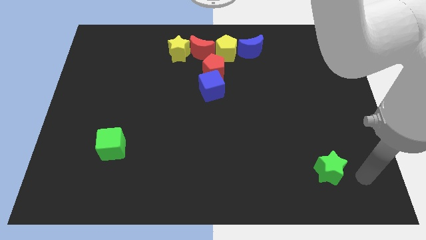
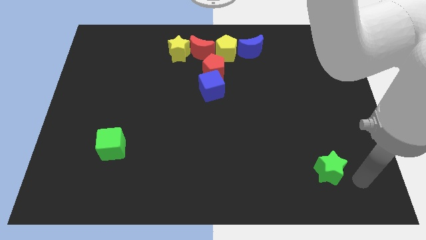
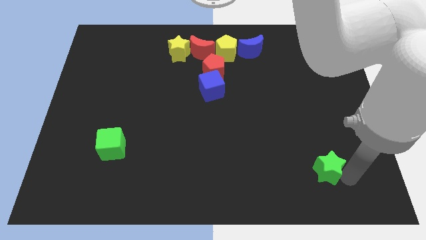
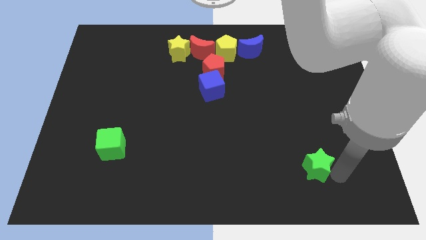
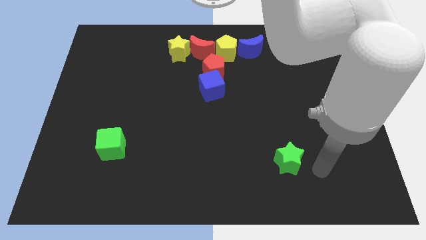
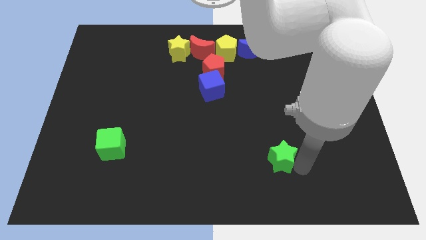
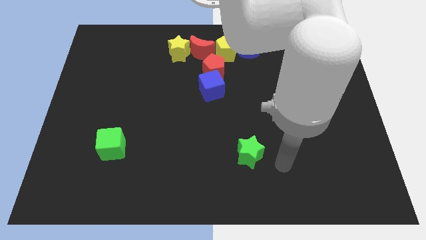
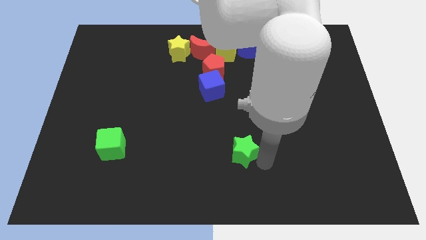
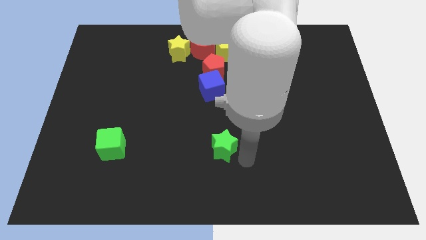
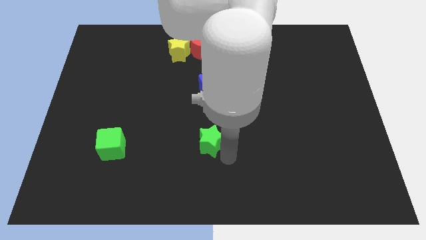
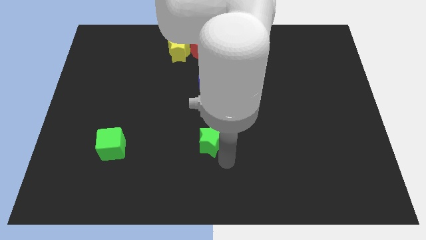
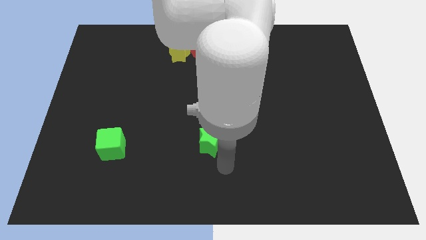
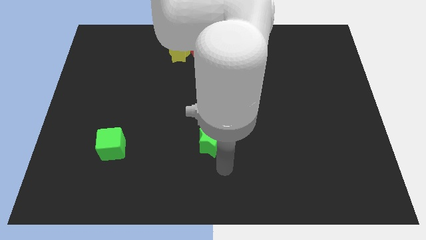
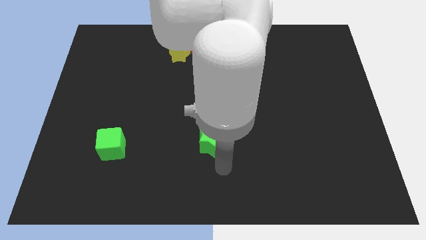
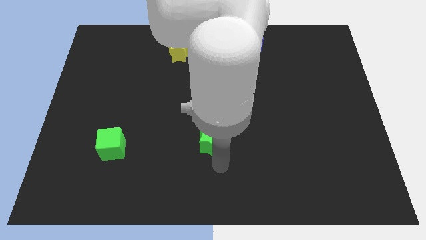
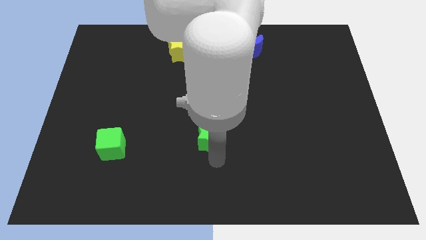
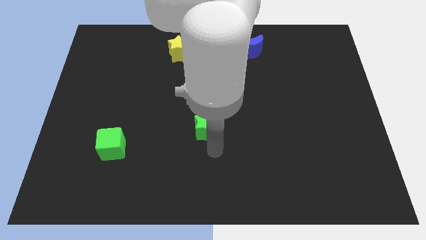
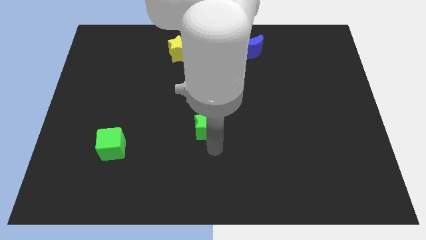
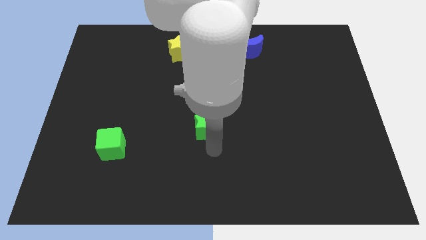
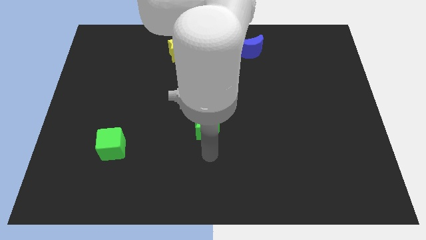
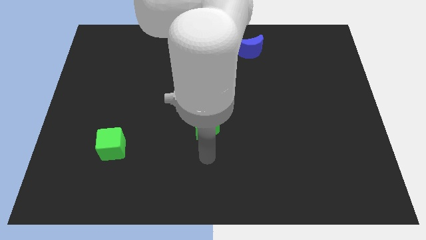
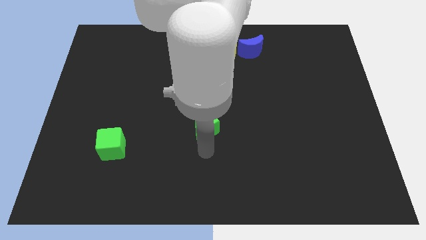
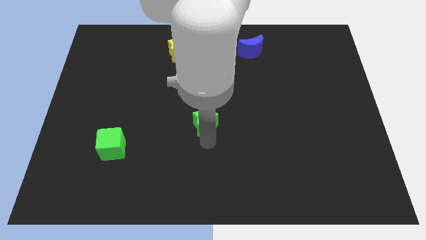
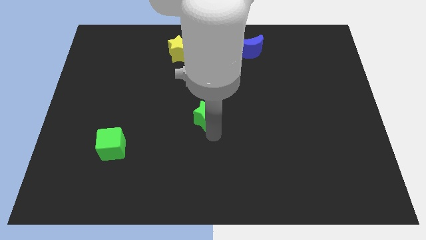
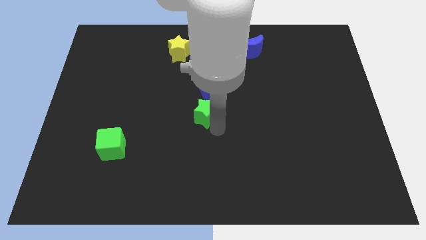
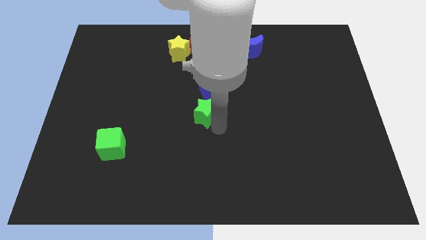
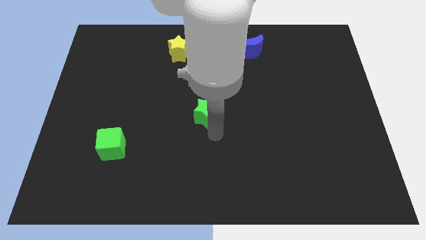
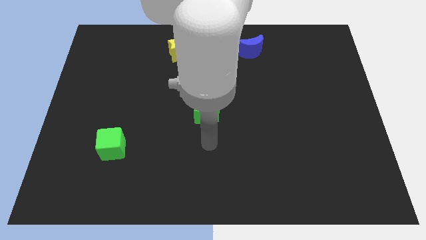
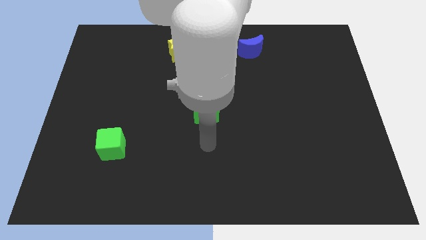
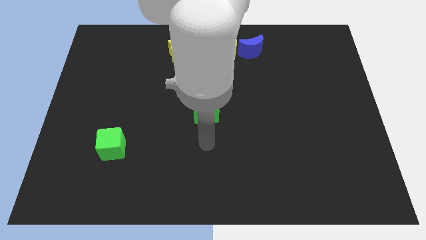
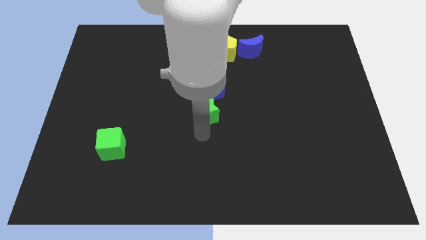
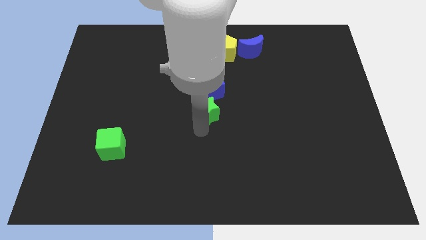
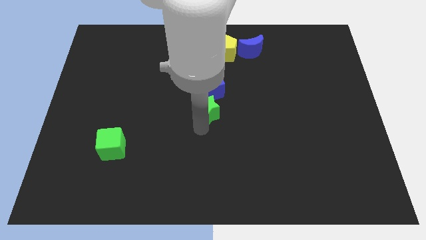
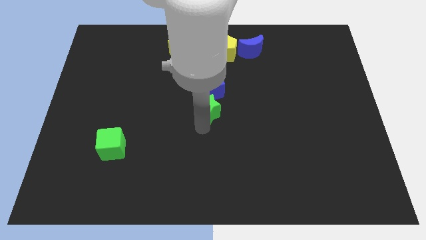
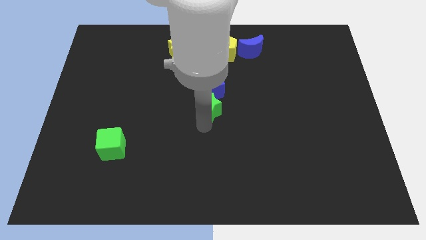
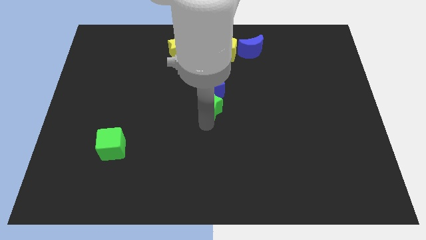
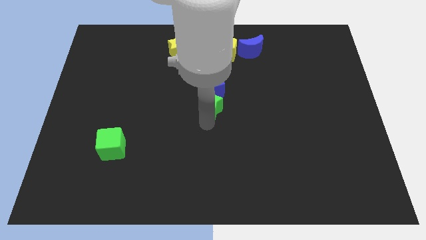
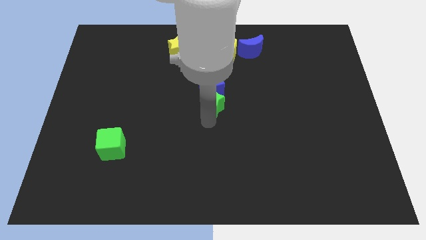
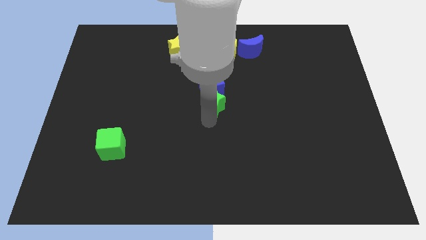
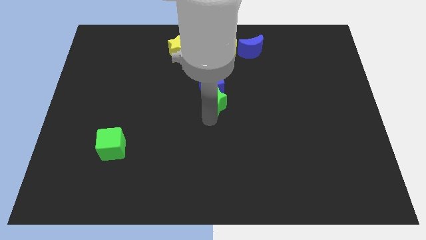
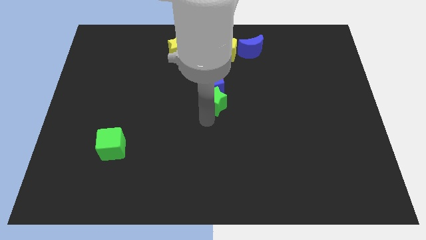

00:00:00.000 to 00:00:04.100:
place the green star below the blue cube

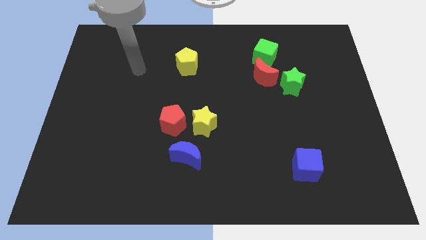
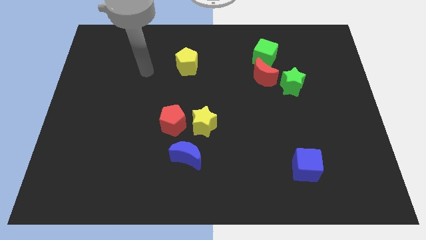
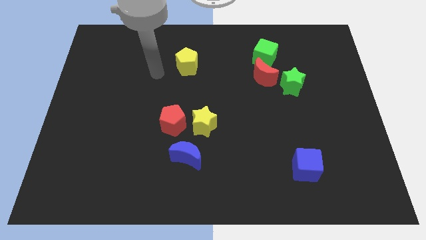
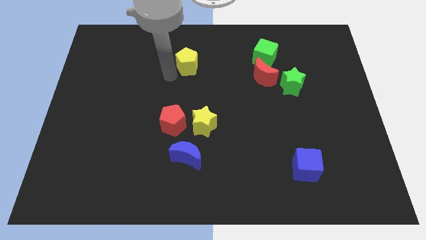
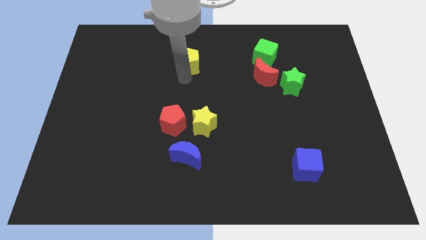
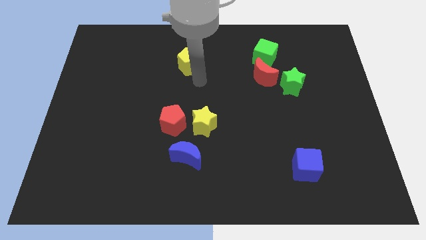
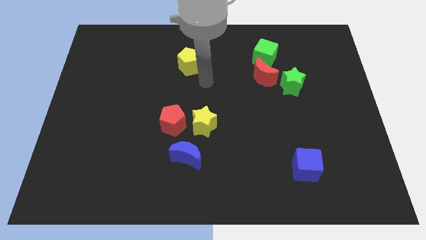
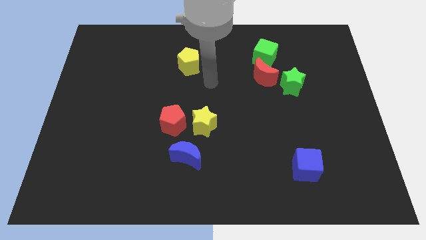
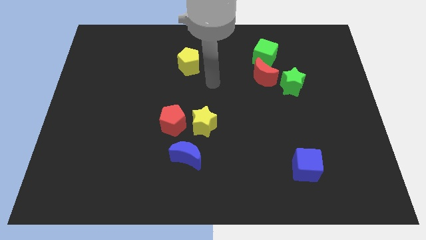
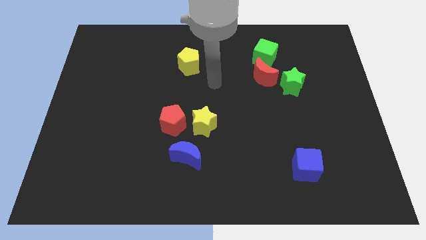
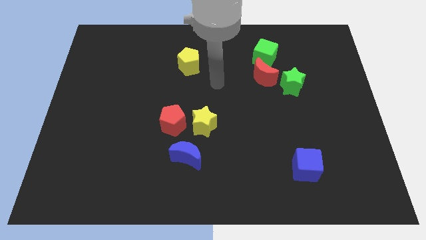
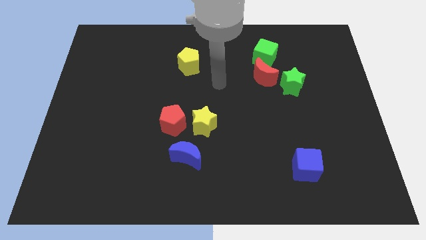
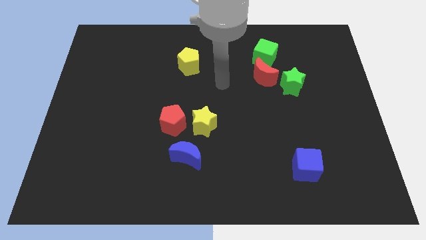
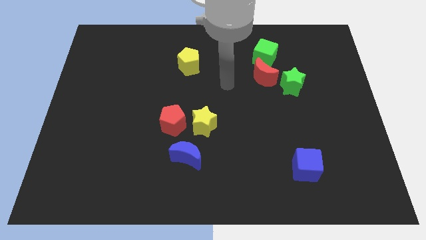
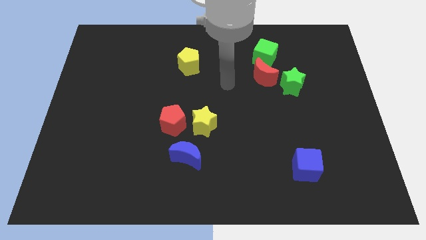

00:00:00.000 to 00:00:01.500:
tap the yellow pentagon

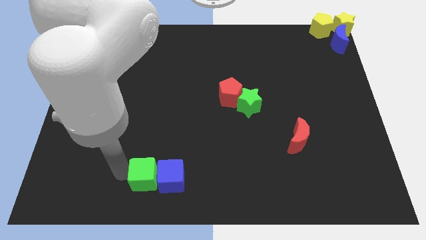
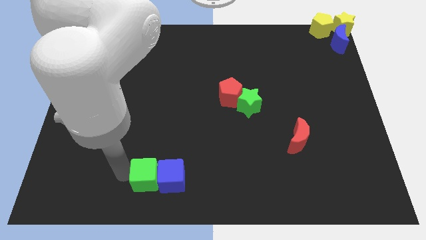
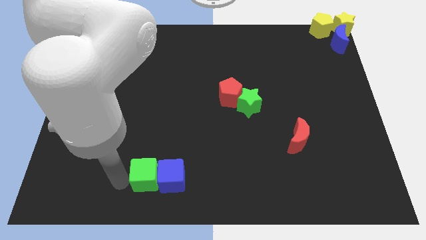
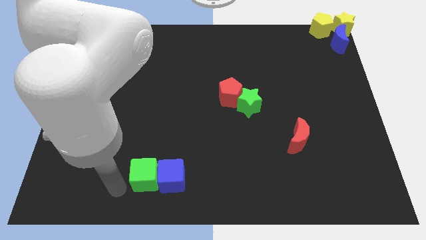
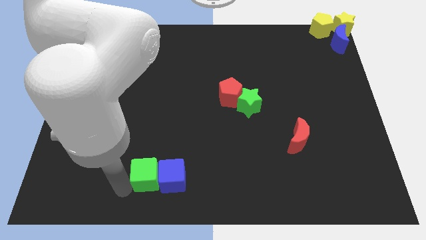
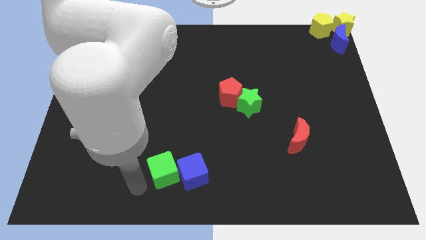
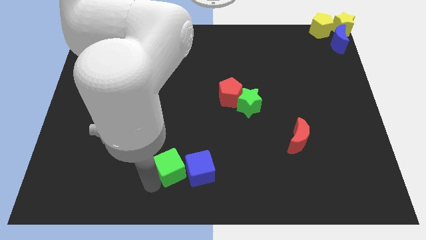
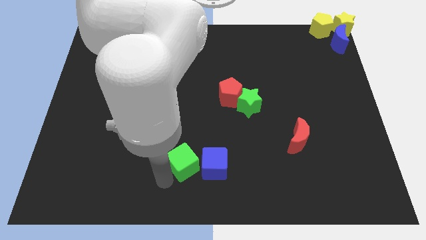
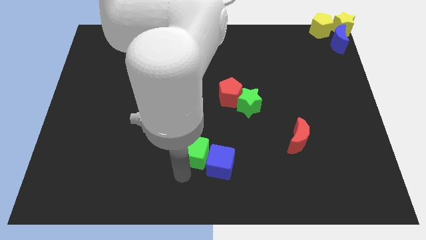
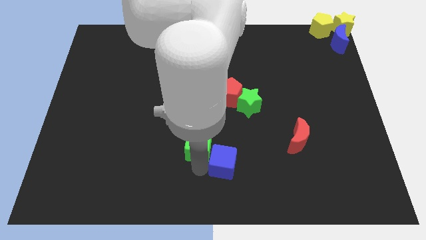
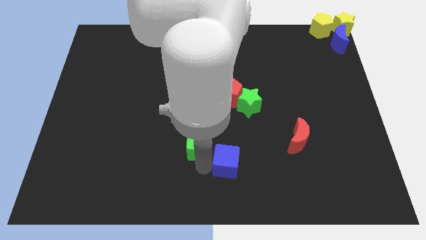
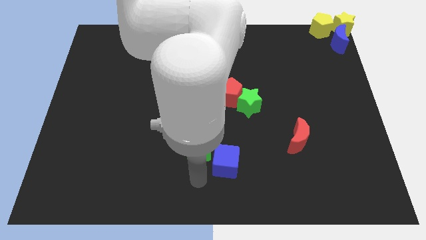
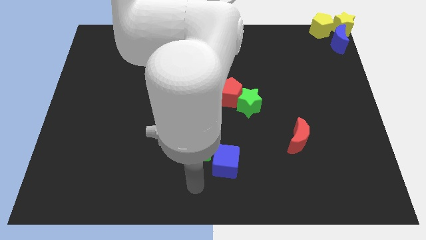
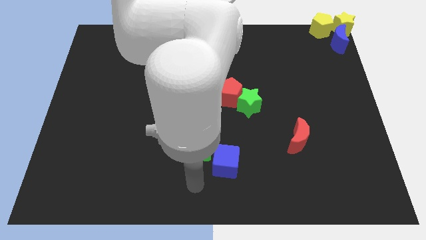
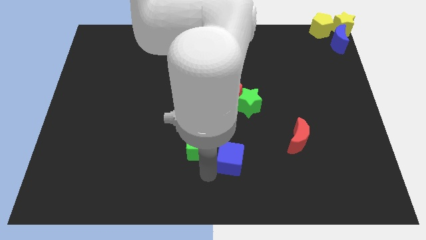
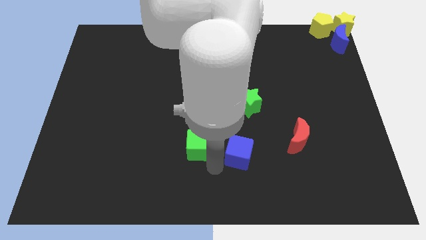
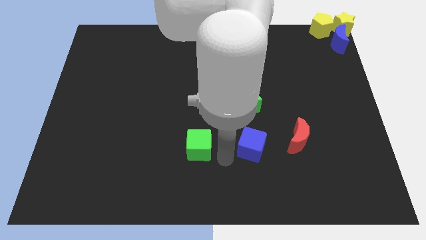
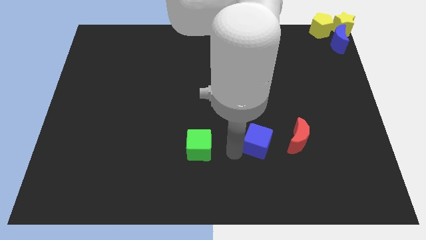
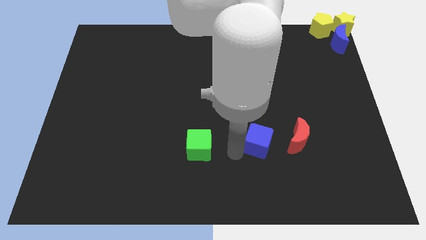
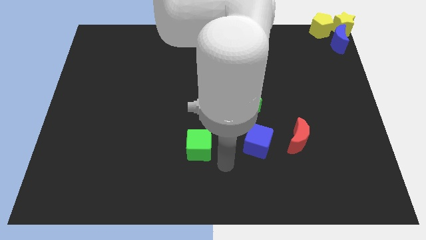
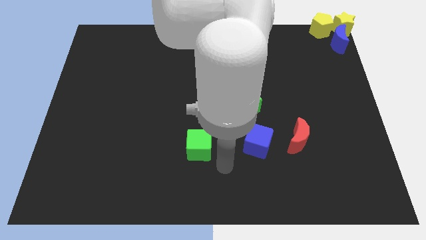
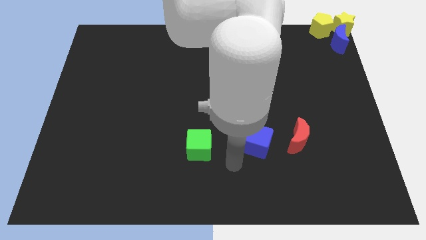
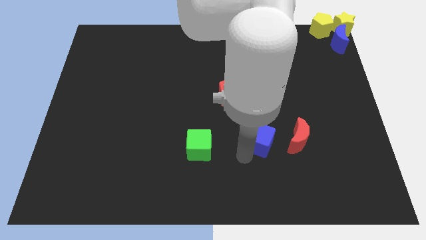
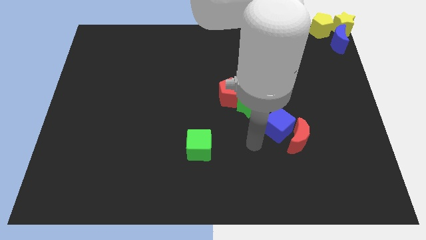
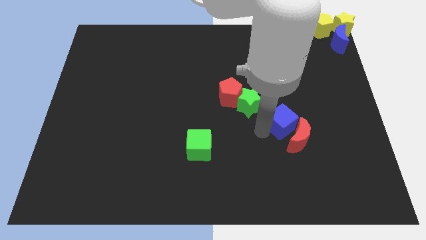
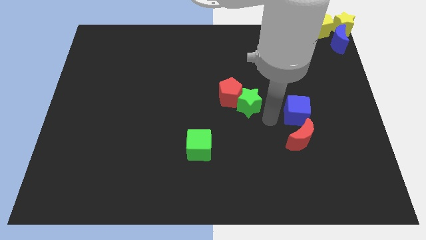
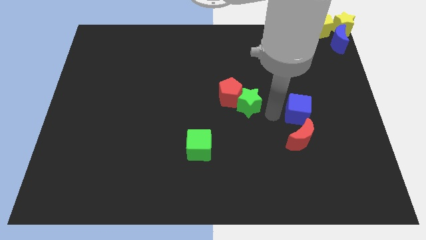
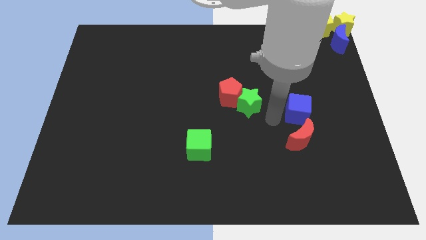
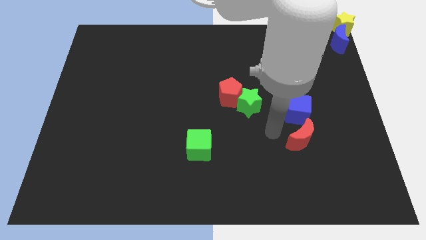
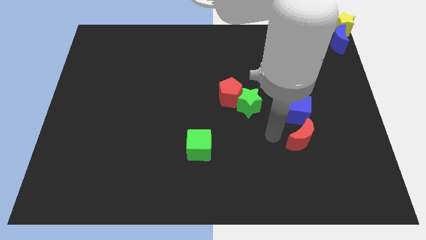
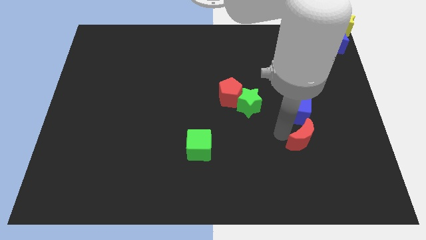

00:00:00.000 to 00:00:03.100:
separate the blue cube from the green cube

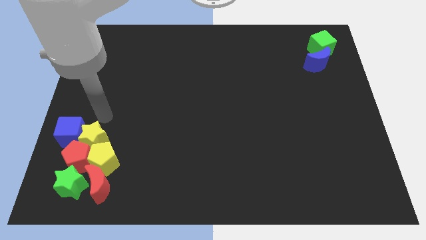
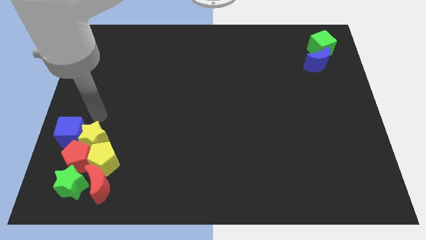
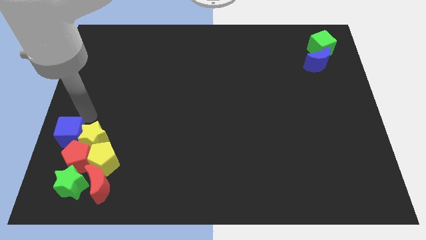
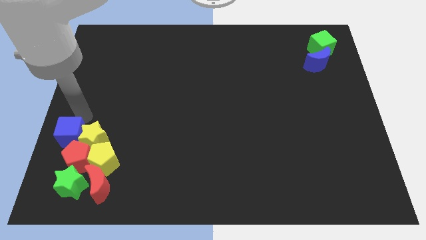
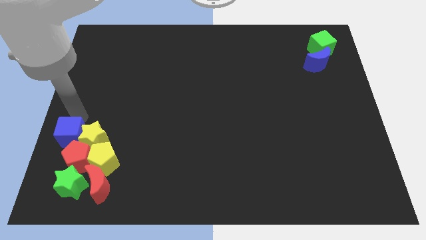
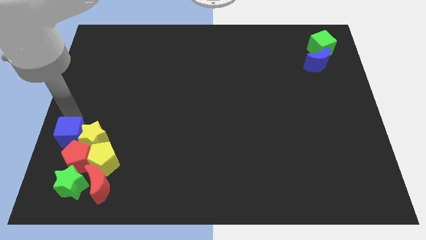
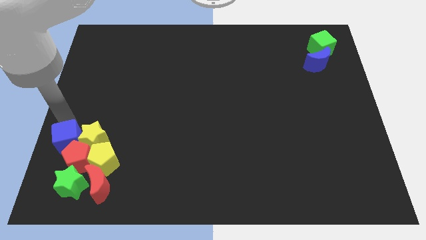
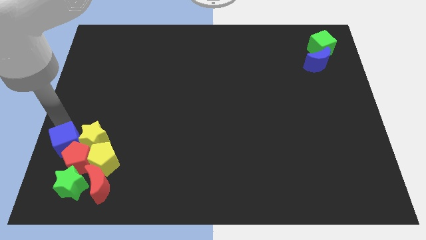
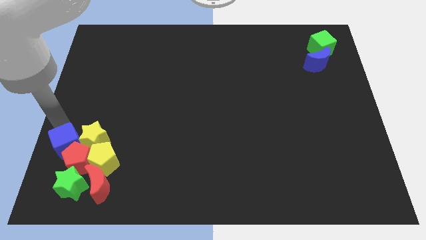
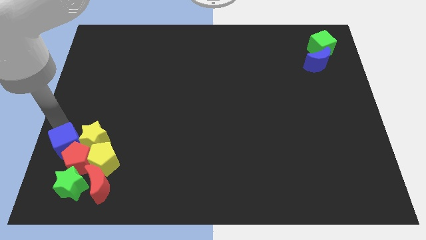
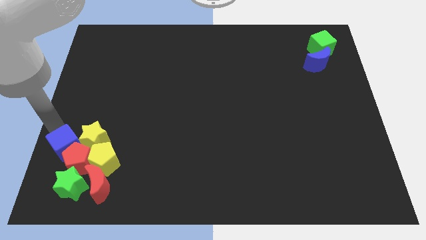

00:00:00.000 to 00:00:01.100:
slightly push the blue cube towards the red pentagon
